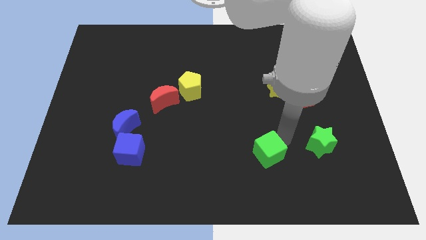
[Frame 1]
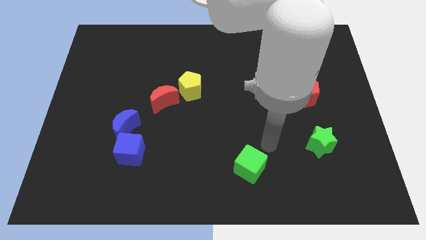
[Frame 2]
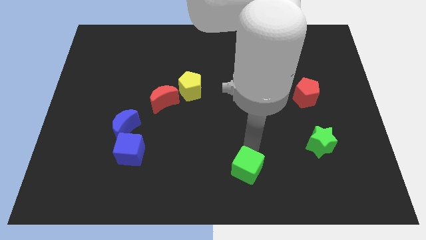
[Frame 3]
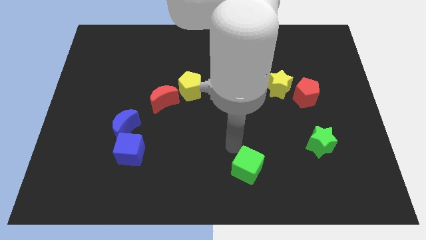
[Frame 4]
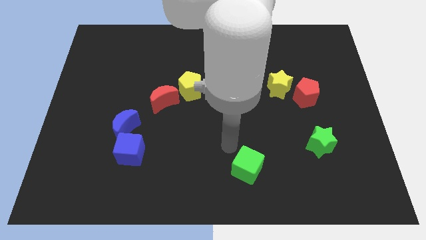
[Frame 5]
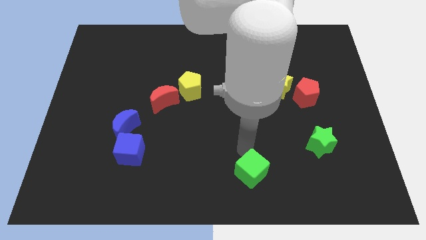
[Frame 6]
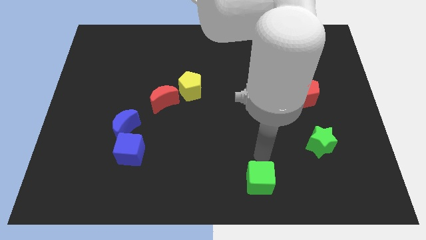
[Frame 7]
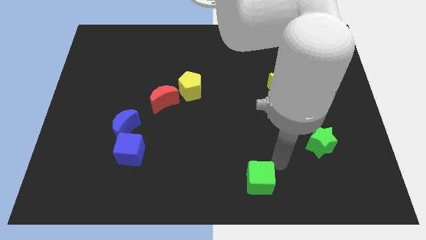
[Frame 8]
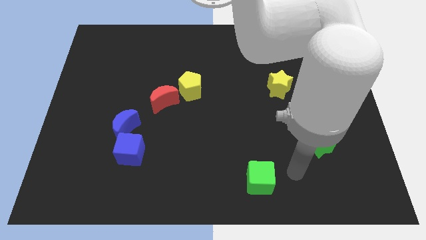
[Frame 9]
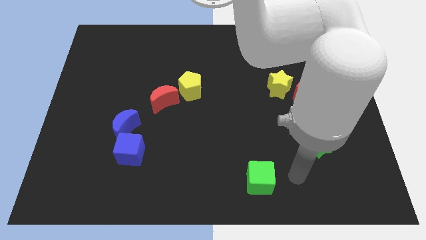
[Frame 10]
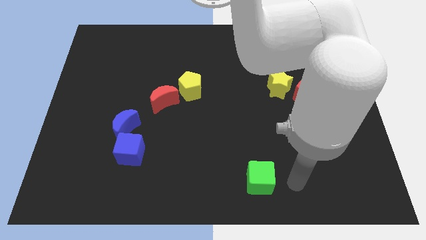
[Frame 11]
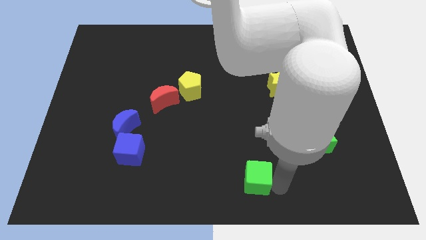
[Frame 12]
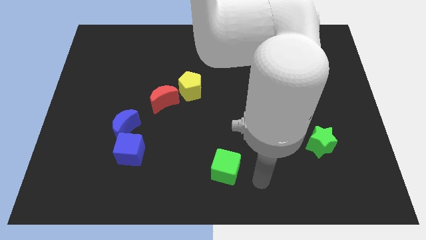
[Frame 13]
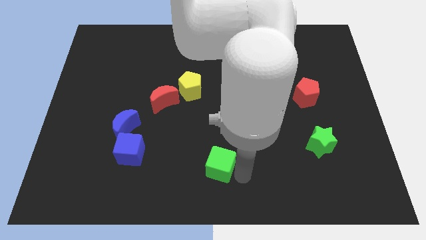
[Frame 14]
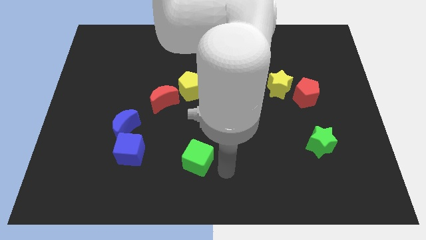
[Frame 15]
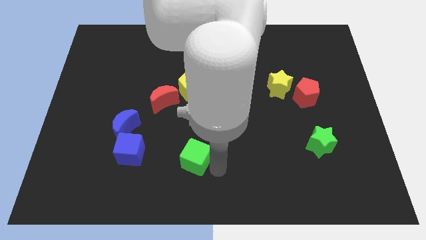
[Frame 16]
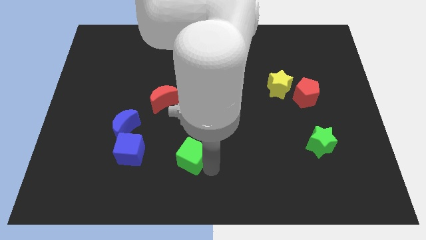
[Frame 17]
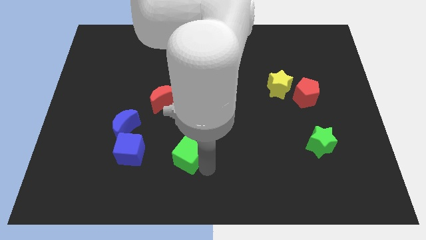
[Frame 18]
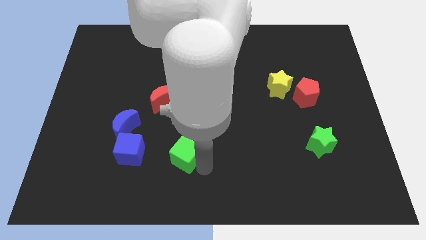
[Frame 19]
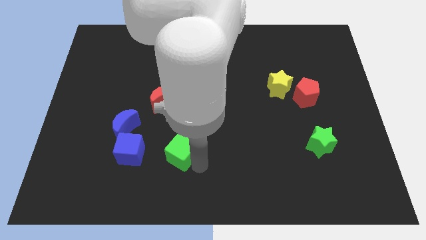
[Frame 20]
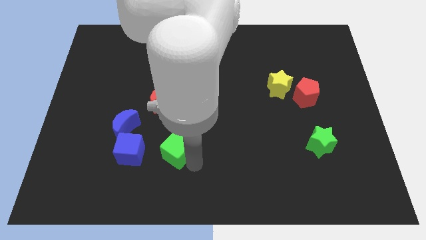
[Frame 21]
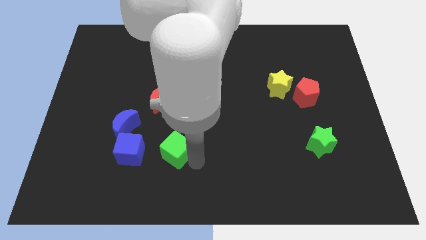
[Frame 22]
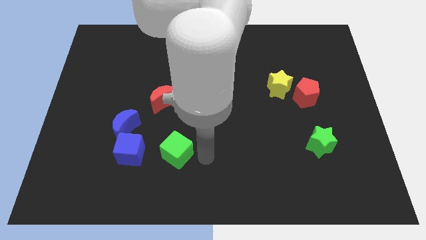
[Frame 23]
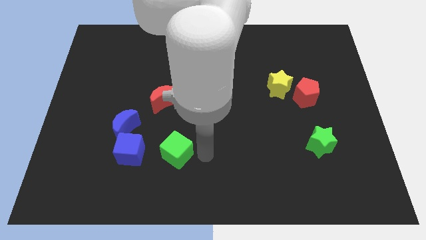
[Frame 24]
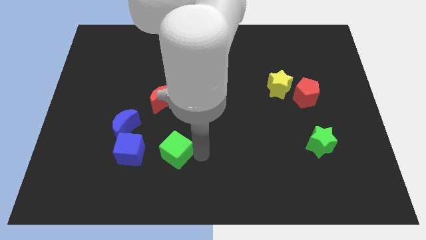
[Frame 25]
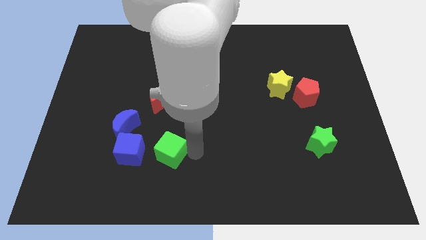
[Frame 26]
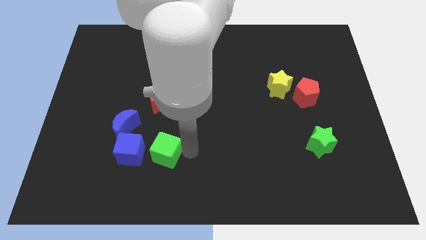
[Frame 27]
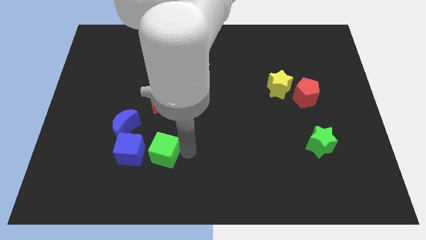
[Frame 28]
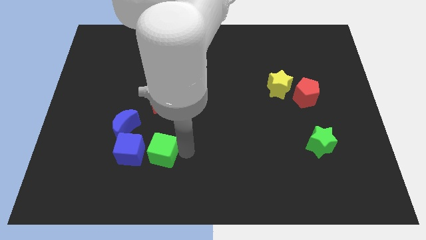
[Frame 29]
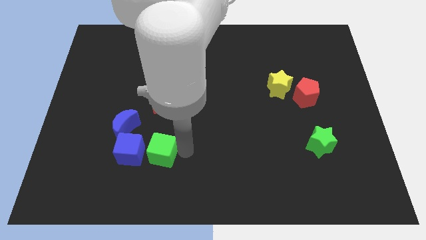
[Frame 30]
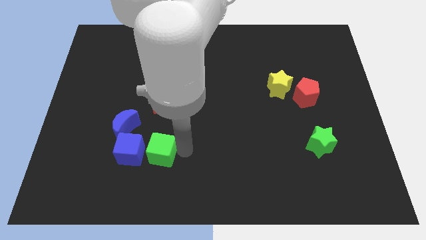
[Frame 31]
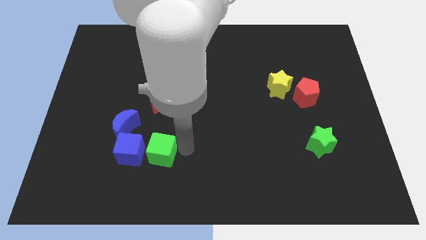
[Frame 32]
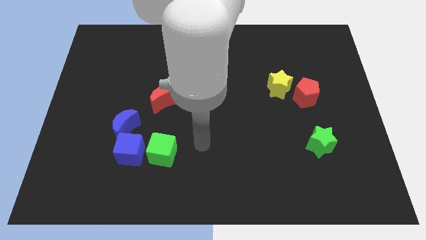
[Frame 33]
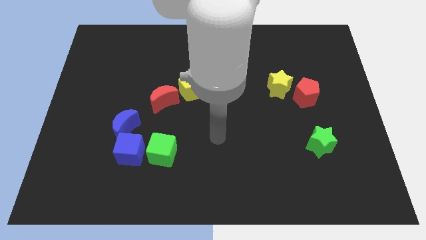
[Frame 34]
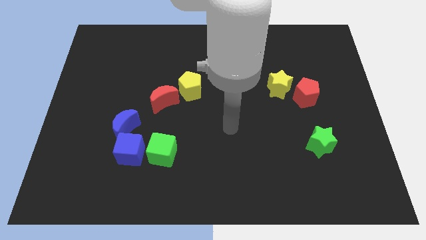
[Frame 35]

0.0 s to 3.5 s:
put the green cube to the right side of the blue cube

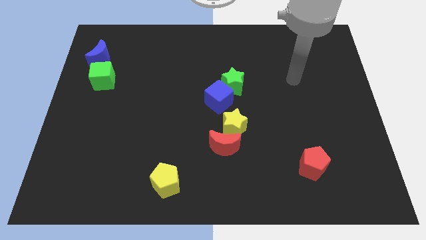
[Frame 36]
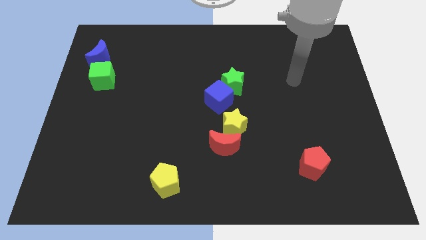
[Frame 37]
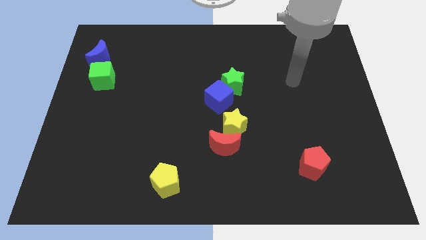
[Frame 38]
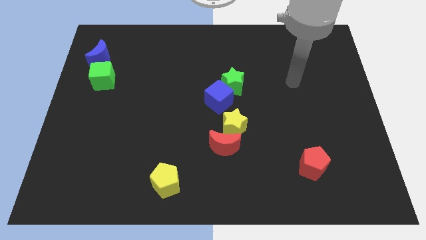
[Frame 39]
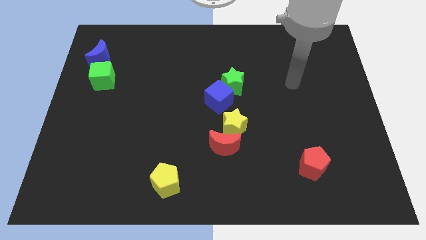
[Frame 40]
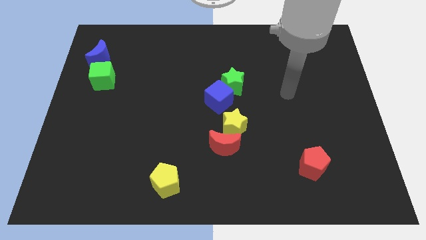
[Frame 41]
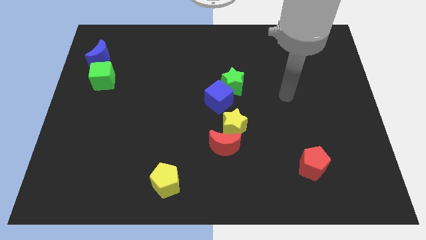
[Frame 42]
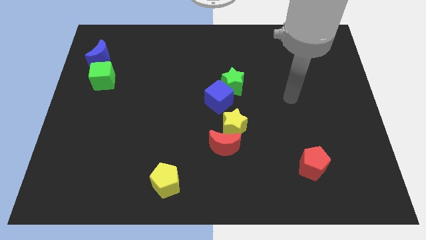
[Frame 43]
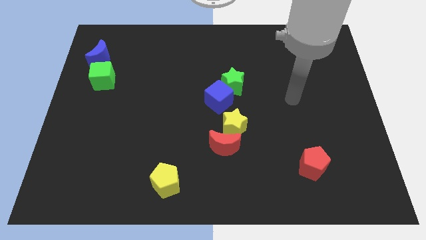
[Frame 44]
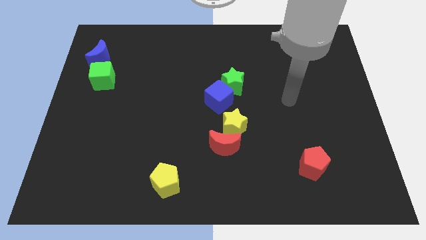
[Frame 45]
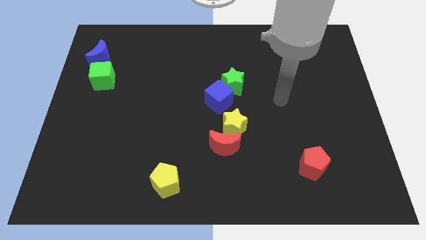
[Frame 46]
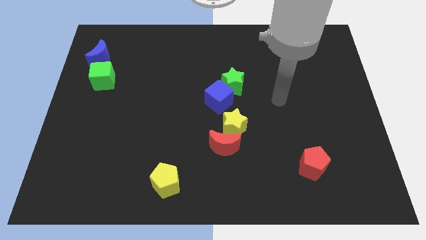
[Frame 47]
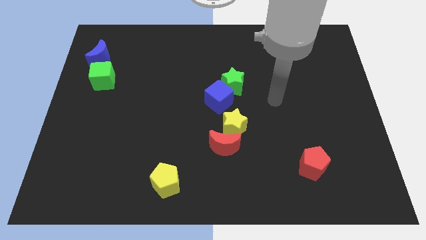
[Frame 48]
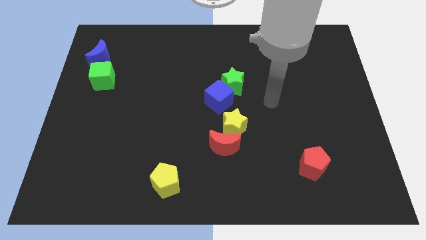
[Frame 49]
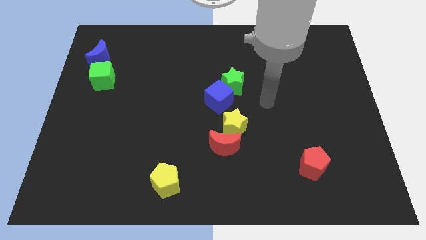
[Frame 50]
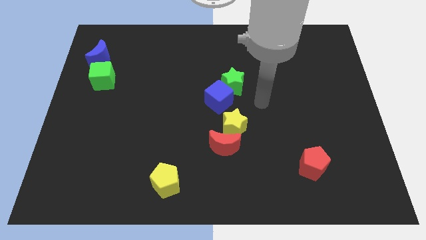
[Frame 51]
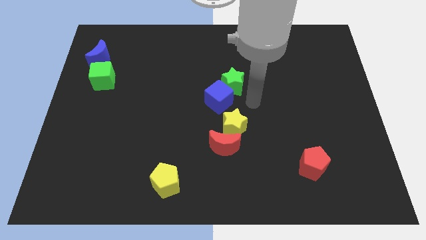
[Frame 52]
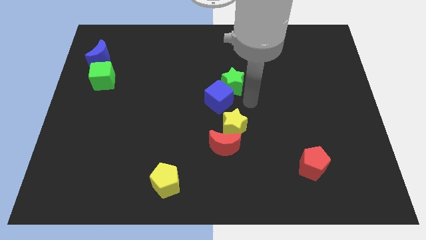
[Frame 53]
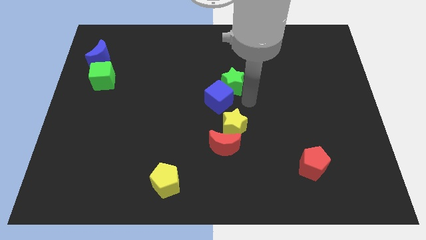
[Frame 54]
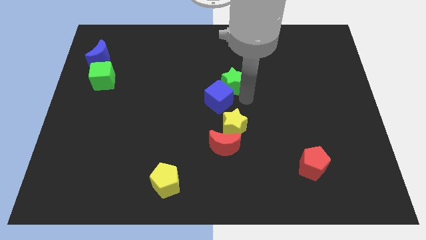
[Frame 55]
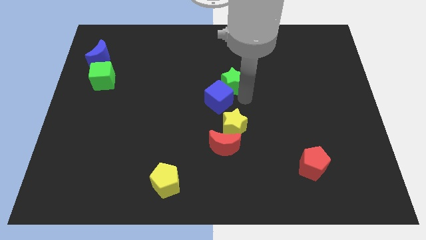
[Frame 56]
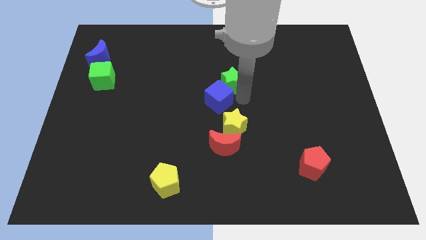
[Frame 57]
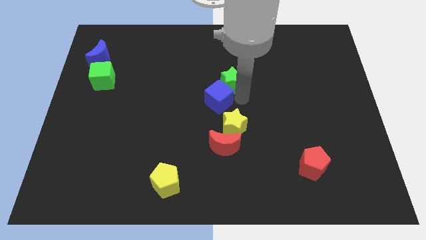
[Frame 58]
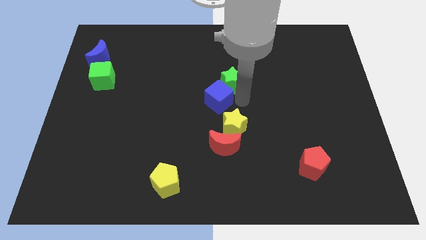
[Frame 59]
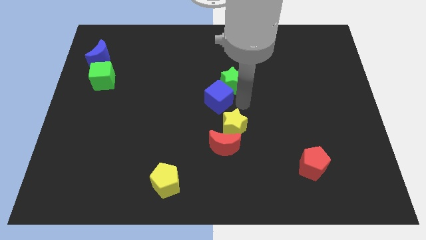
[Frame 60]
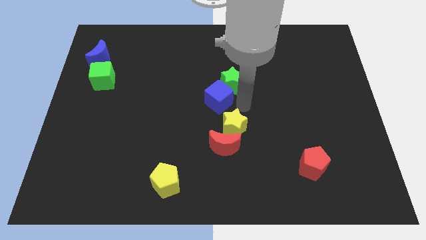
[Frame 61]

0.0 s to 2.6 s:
slightly touch the green star

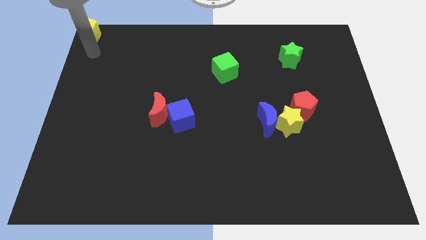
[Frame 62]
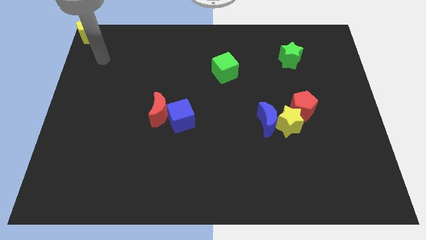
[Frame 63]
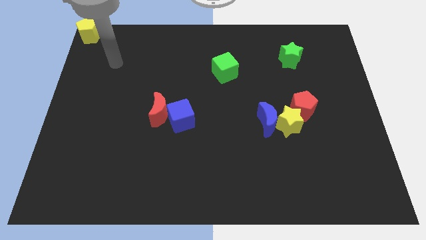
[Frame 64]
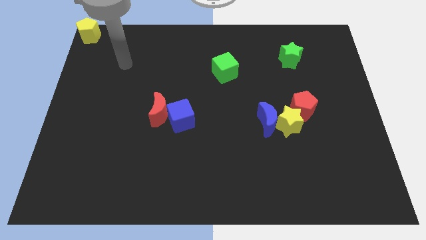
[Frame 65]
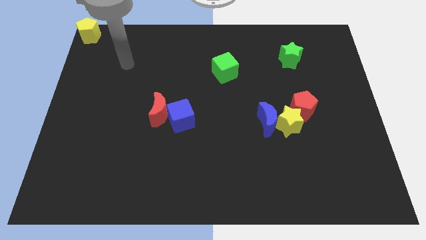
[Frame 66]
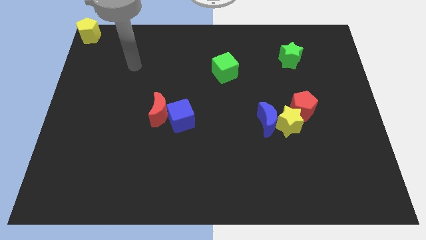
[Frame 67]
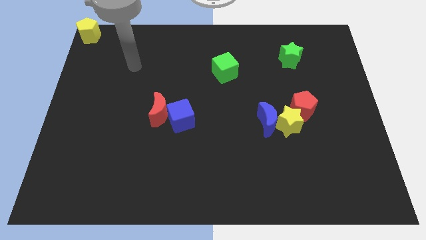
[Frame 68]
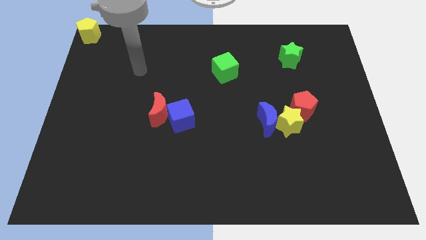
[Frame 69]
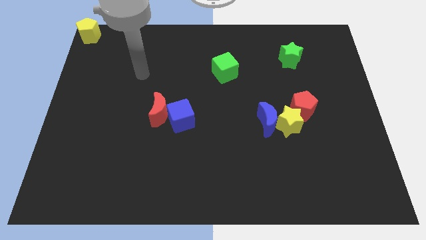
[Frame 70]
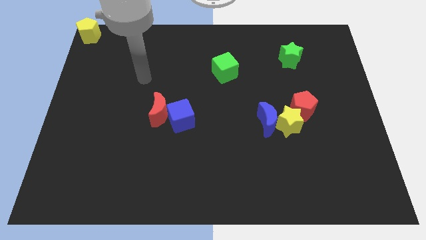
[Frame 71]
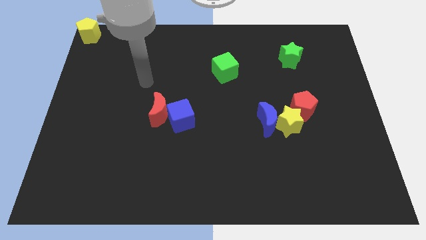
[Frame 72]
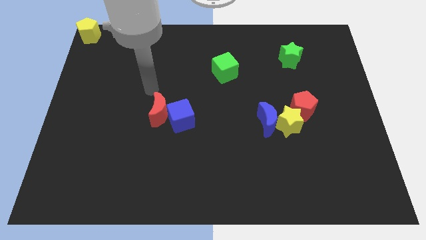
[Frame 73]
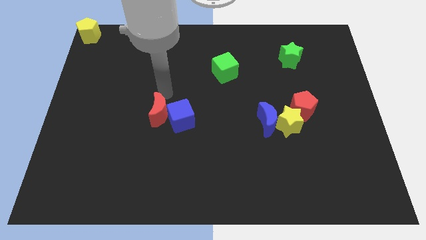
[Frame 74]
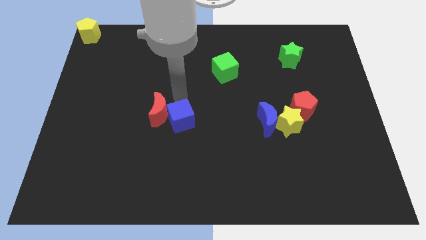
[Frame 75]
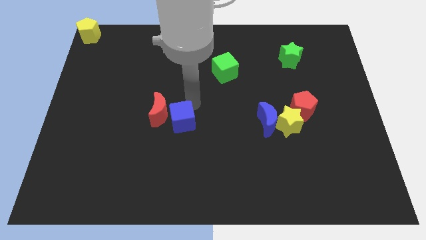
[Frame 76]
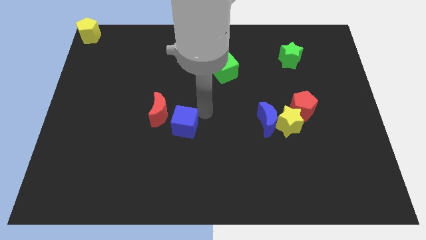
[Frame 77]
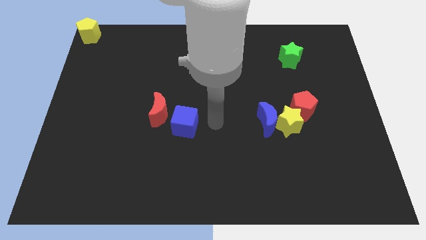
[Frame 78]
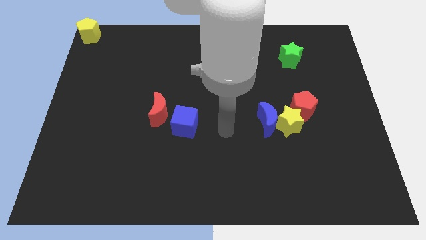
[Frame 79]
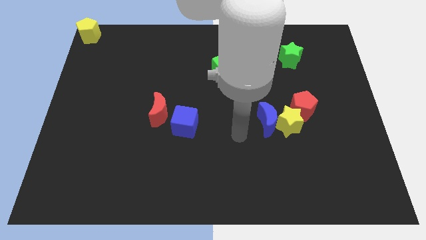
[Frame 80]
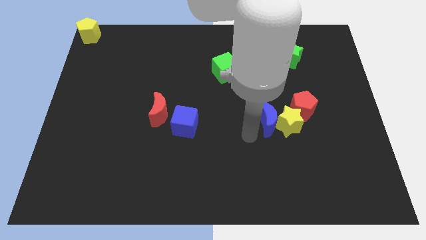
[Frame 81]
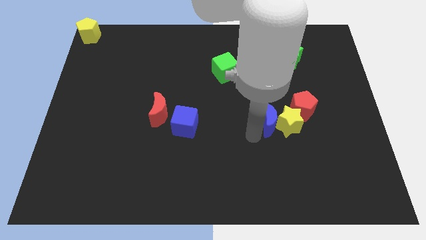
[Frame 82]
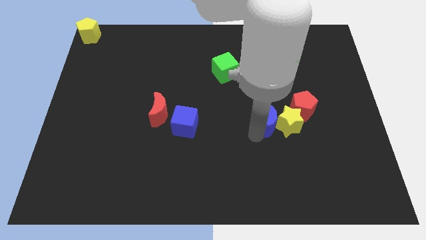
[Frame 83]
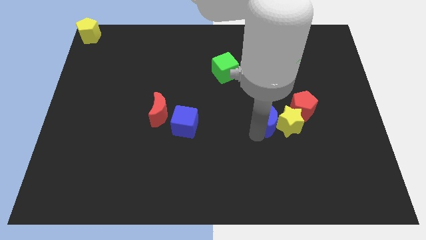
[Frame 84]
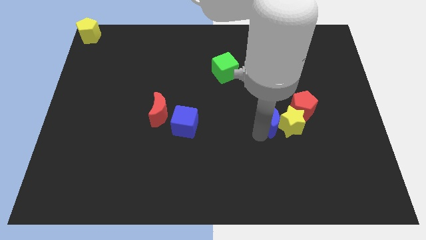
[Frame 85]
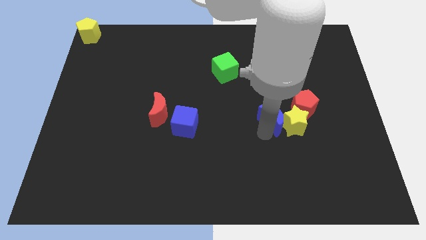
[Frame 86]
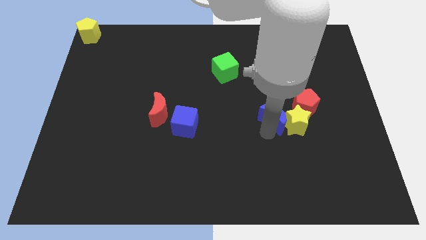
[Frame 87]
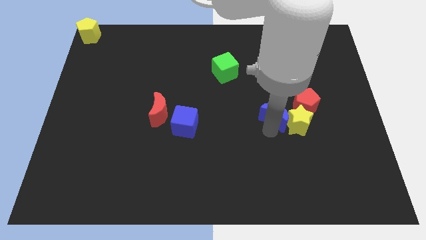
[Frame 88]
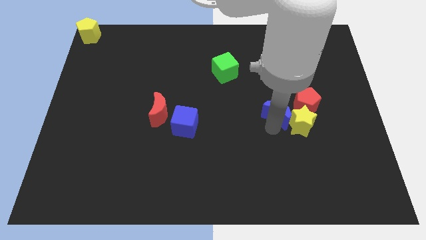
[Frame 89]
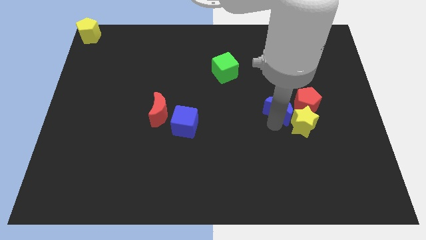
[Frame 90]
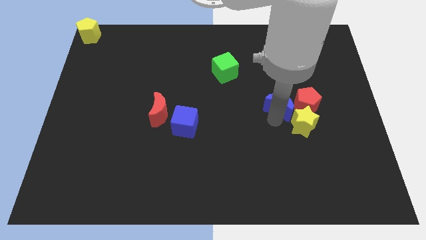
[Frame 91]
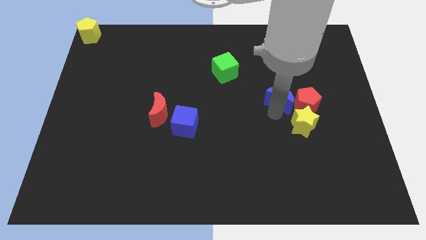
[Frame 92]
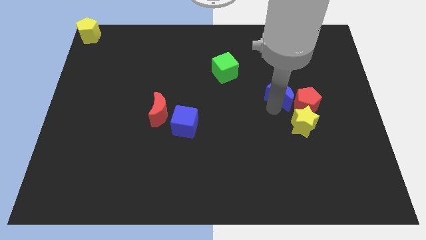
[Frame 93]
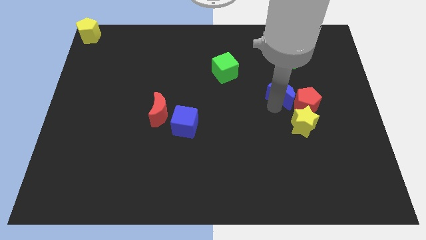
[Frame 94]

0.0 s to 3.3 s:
push the blue crescent slightly to the left of red pentagon
